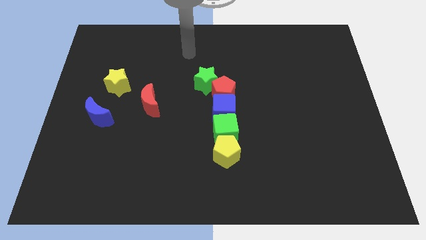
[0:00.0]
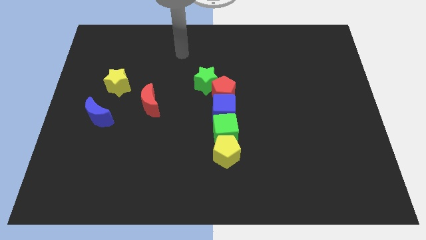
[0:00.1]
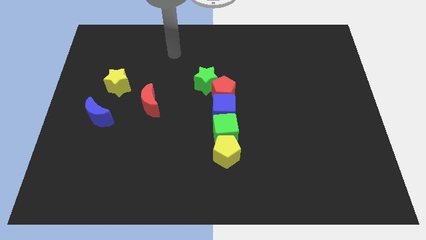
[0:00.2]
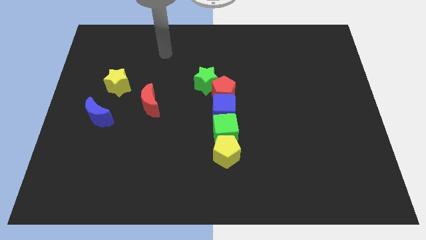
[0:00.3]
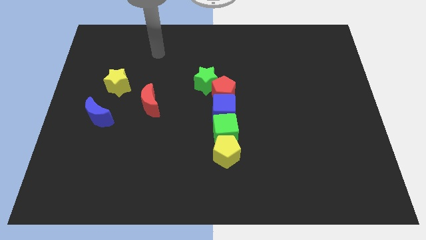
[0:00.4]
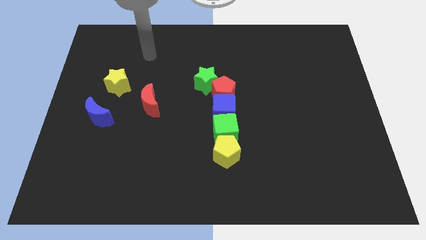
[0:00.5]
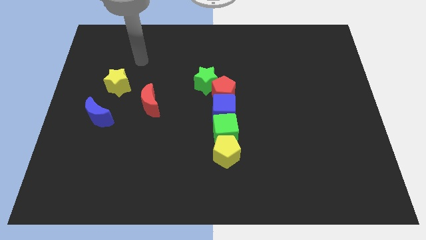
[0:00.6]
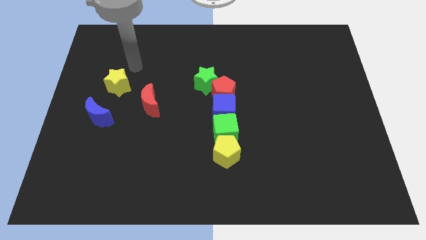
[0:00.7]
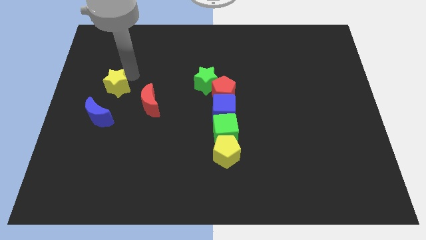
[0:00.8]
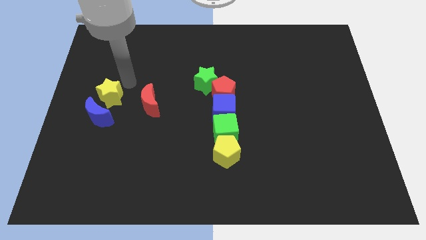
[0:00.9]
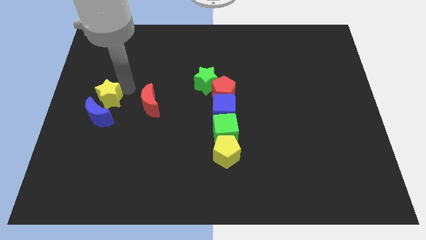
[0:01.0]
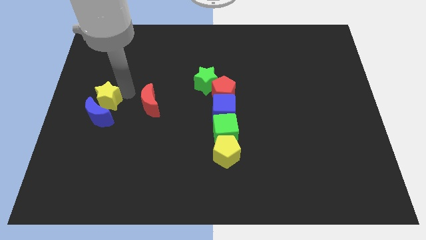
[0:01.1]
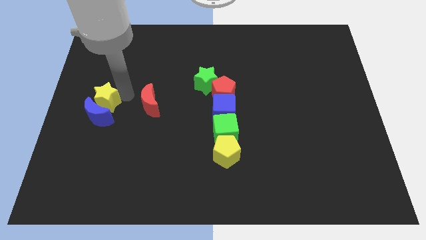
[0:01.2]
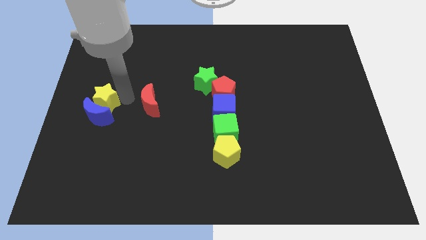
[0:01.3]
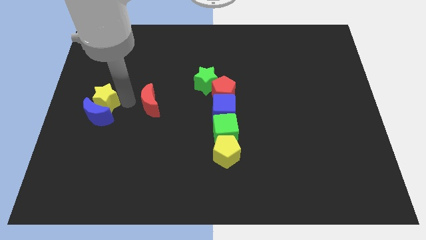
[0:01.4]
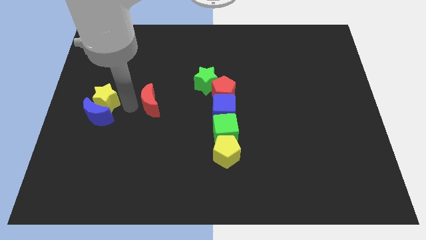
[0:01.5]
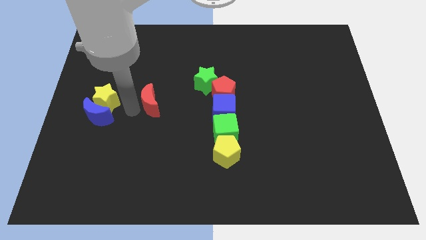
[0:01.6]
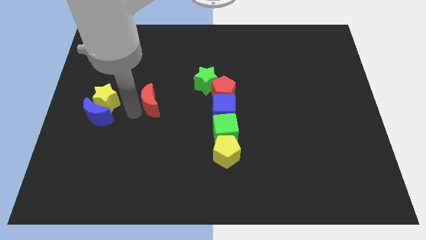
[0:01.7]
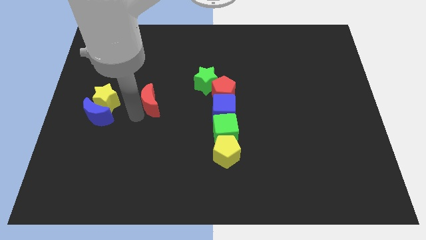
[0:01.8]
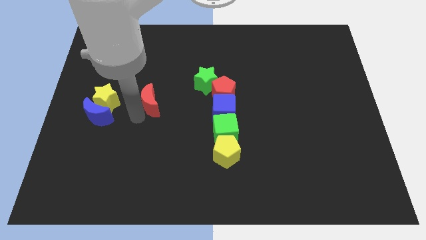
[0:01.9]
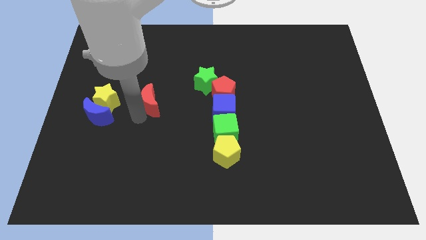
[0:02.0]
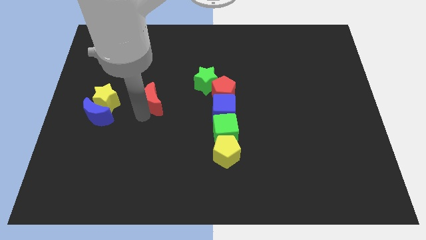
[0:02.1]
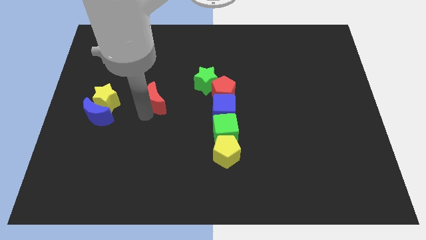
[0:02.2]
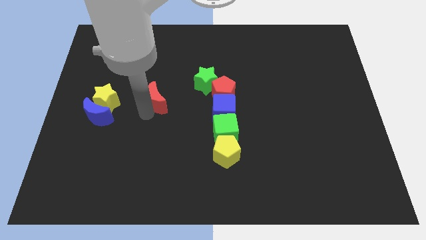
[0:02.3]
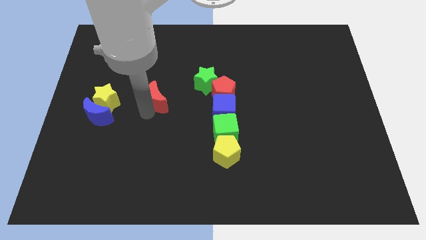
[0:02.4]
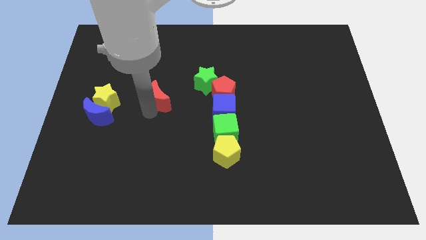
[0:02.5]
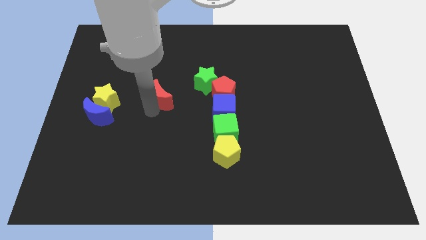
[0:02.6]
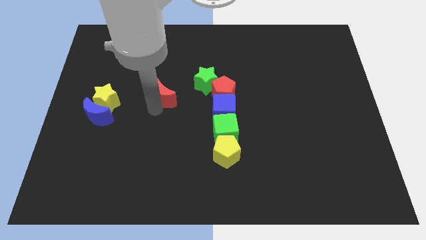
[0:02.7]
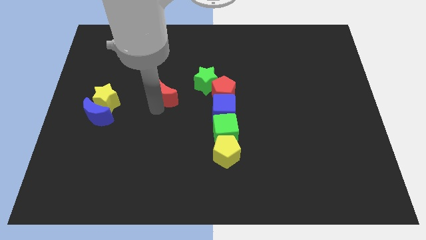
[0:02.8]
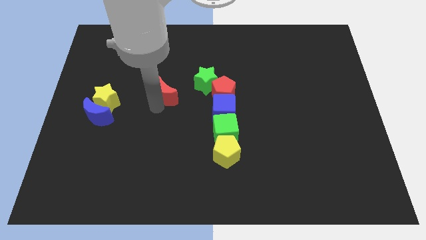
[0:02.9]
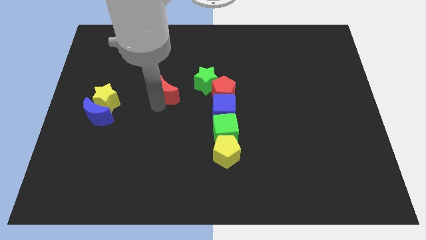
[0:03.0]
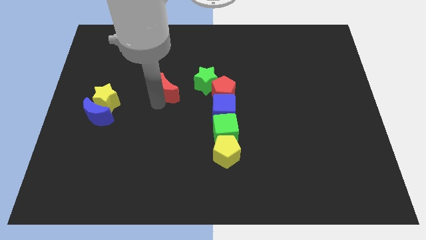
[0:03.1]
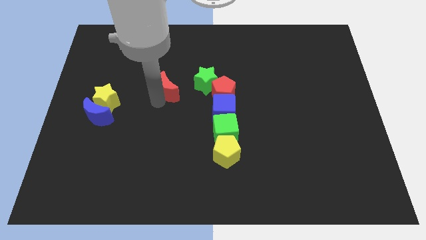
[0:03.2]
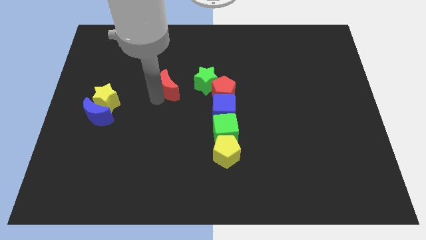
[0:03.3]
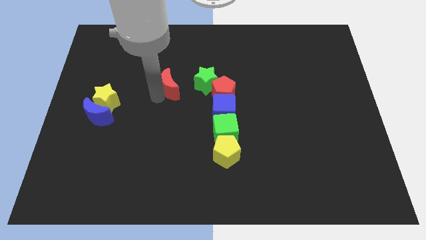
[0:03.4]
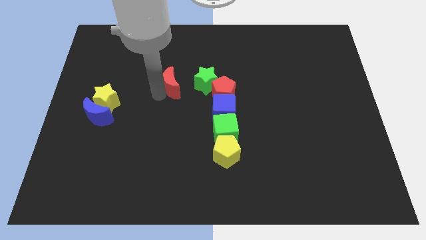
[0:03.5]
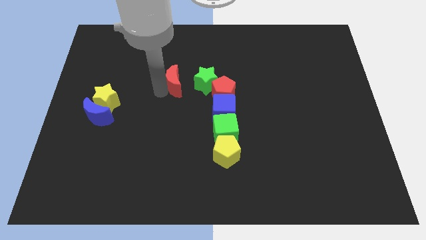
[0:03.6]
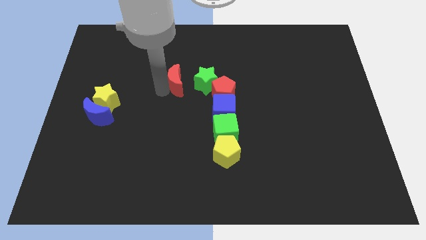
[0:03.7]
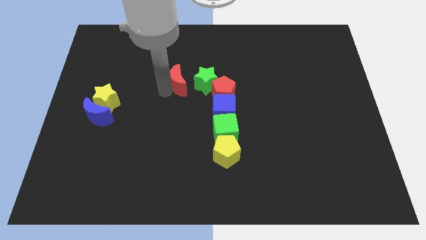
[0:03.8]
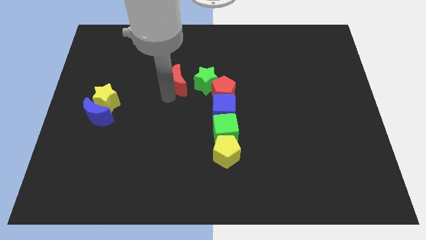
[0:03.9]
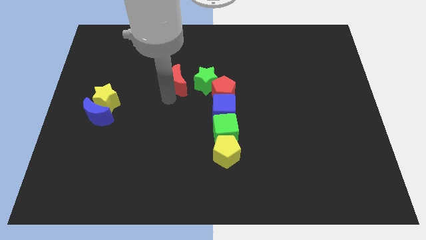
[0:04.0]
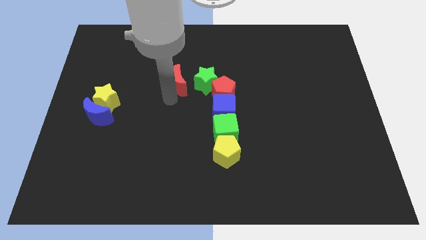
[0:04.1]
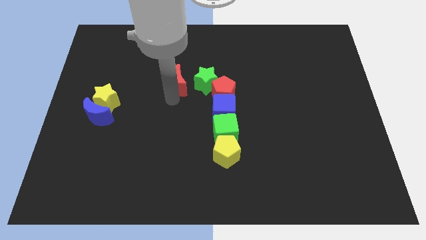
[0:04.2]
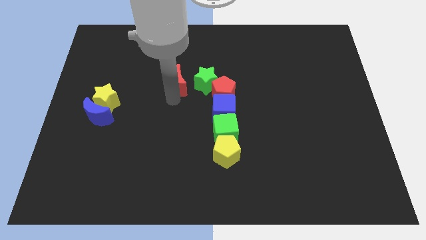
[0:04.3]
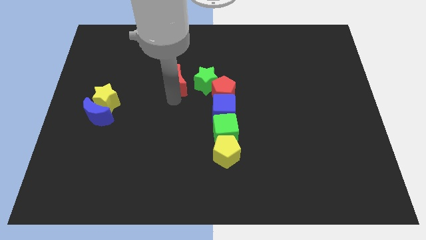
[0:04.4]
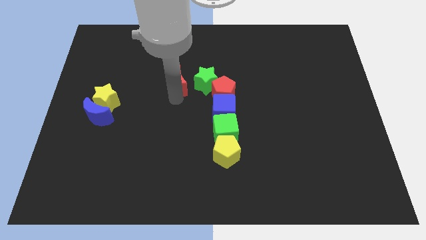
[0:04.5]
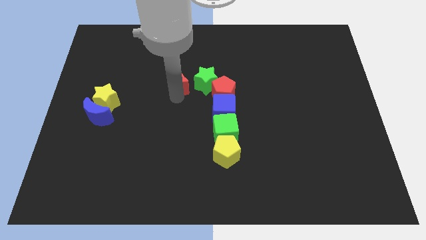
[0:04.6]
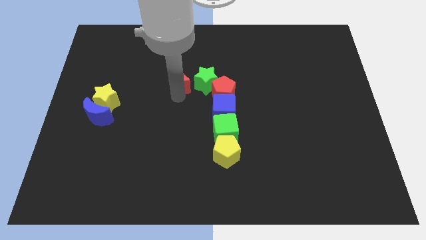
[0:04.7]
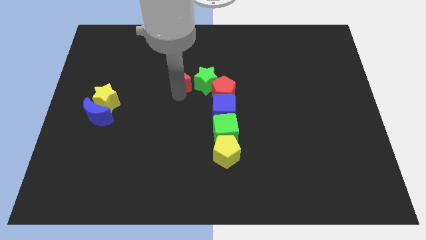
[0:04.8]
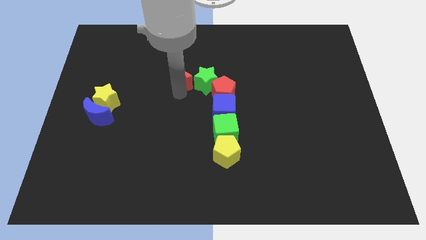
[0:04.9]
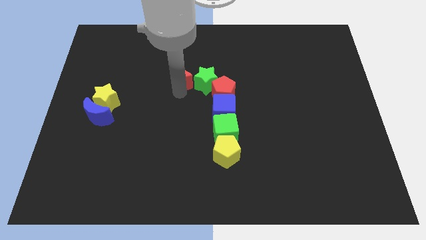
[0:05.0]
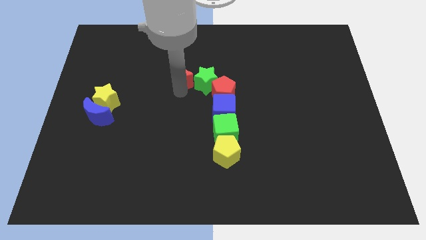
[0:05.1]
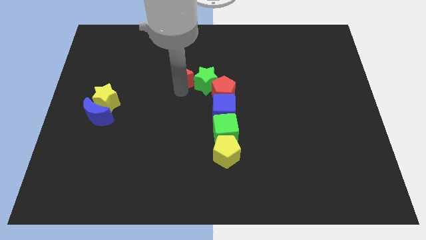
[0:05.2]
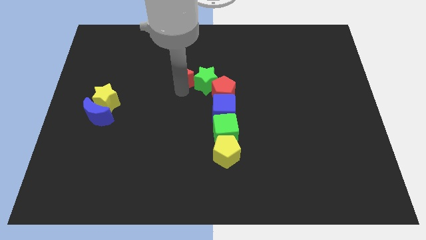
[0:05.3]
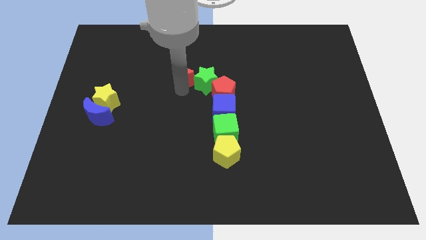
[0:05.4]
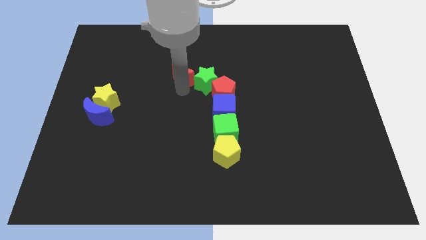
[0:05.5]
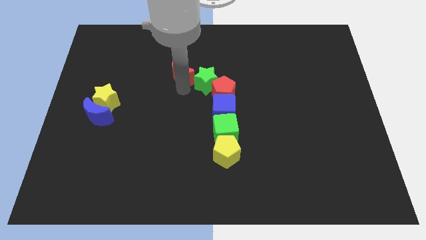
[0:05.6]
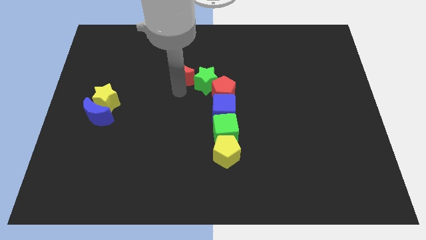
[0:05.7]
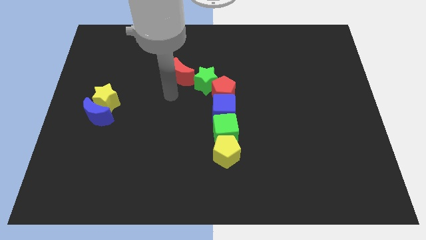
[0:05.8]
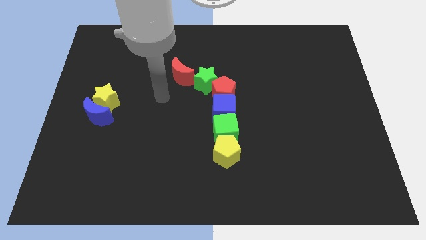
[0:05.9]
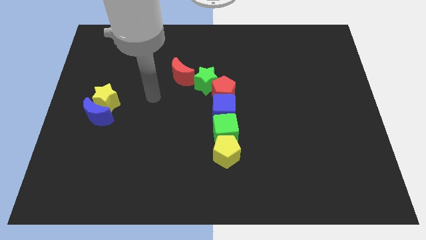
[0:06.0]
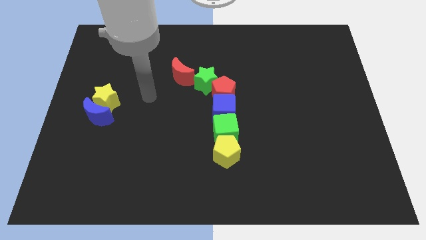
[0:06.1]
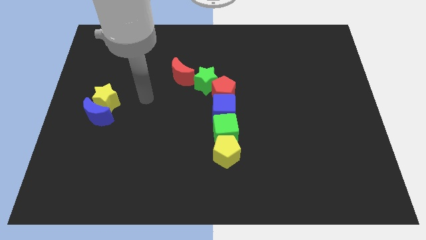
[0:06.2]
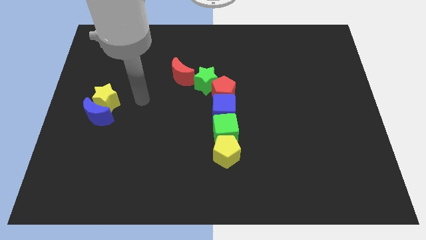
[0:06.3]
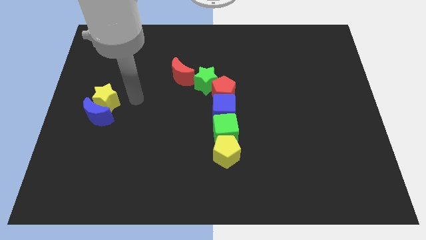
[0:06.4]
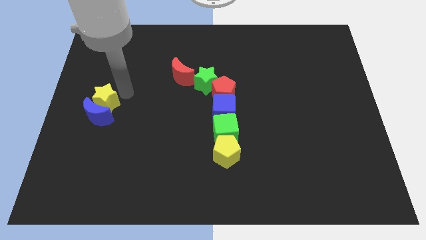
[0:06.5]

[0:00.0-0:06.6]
move the red crescent close to the green star

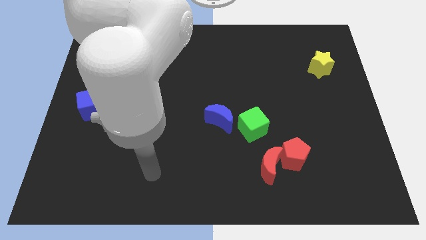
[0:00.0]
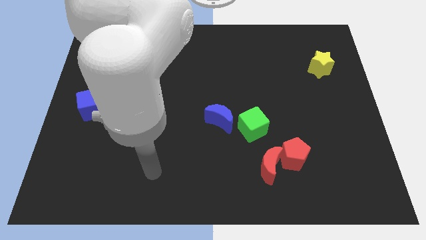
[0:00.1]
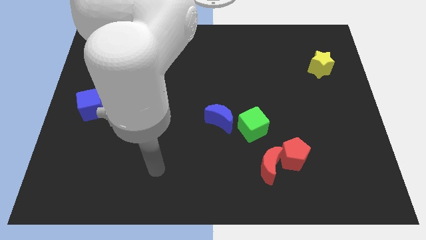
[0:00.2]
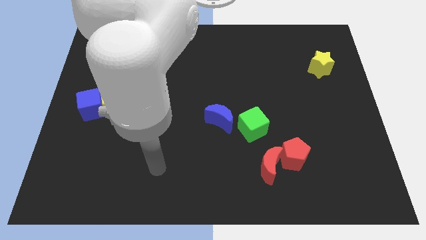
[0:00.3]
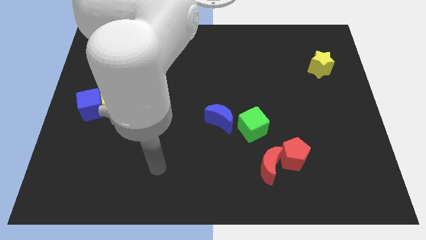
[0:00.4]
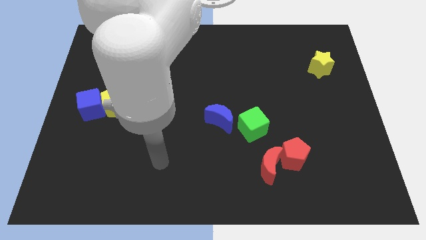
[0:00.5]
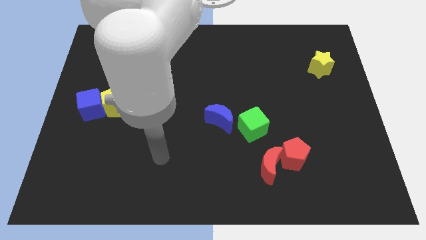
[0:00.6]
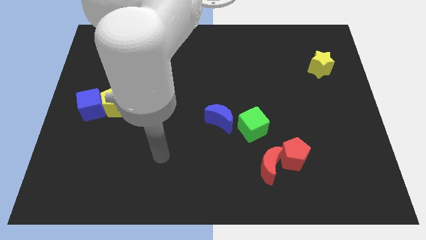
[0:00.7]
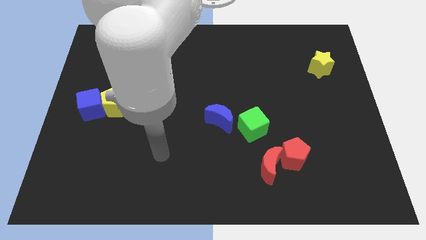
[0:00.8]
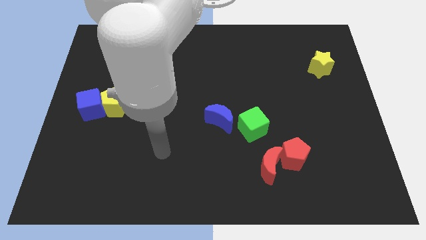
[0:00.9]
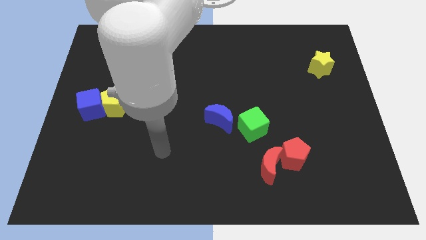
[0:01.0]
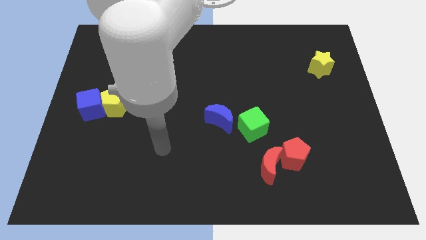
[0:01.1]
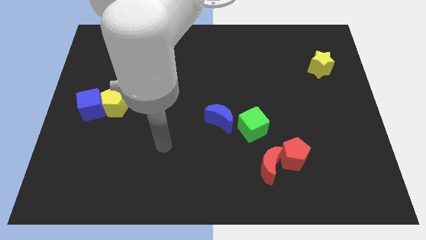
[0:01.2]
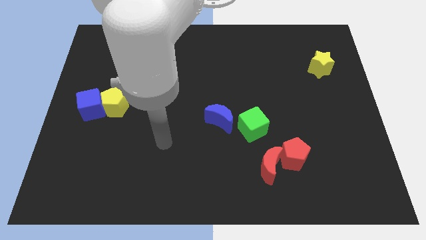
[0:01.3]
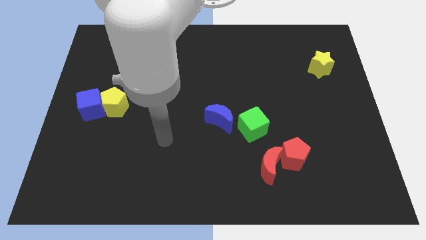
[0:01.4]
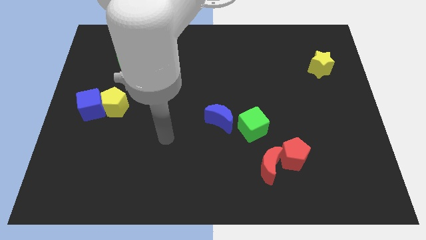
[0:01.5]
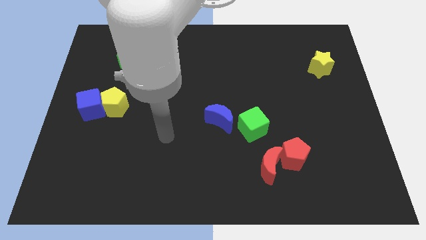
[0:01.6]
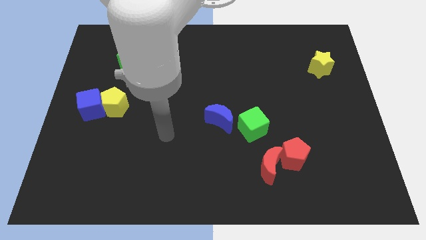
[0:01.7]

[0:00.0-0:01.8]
move the arm slightly to the top

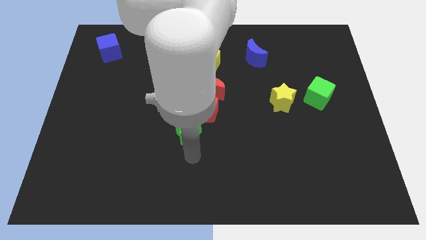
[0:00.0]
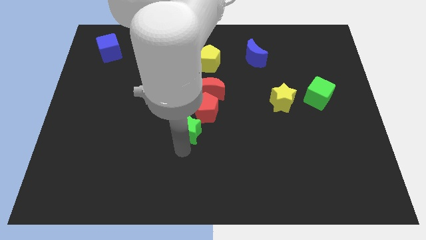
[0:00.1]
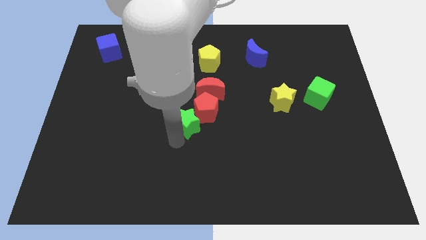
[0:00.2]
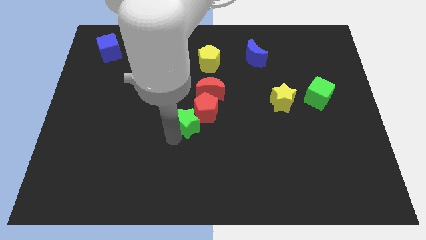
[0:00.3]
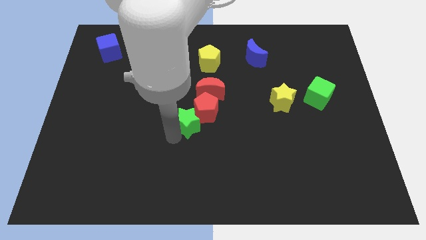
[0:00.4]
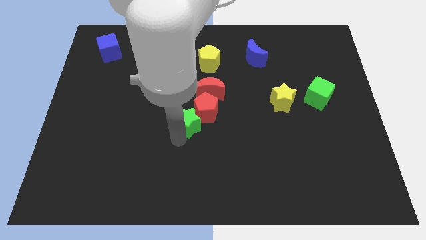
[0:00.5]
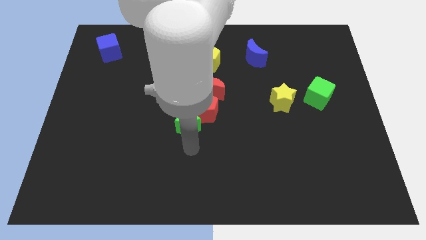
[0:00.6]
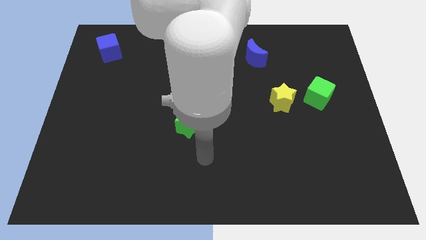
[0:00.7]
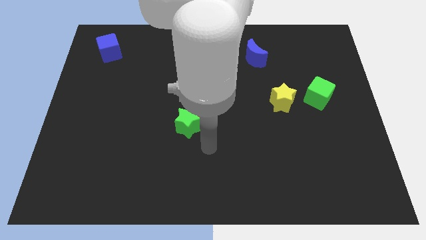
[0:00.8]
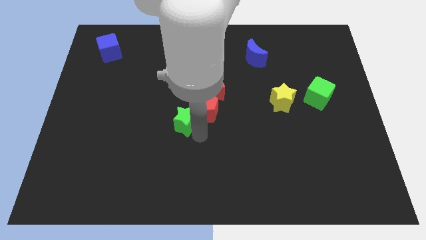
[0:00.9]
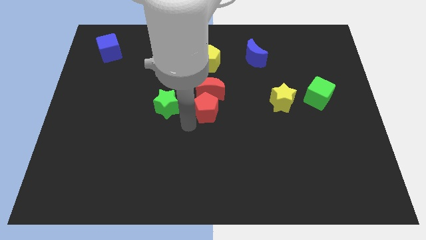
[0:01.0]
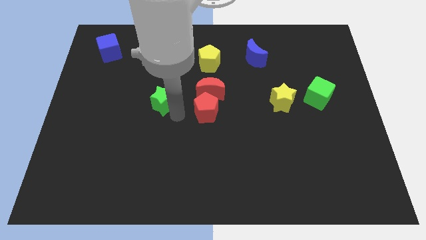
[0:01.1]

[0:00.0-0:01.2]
separate green star from red pentagon
